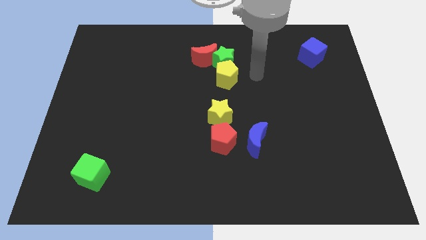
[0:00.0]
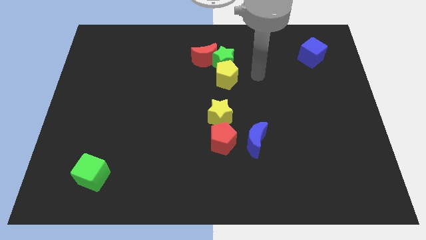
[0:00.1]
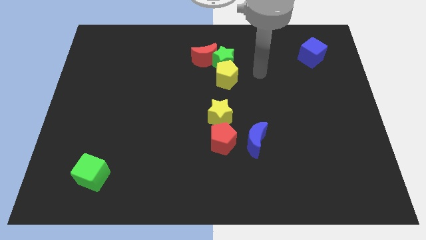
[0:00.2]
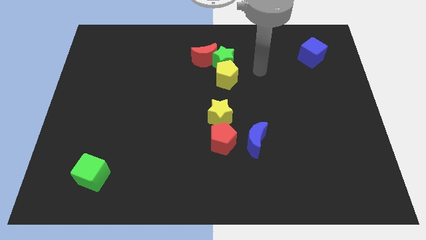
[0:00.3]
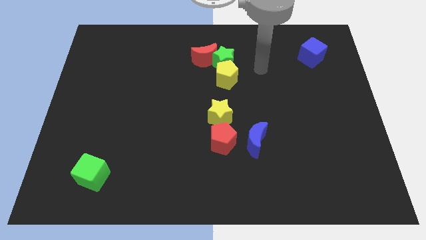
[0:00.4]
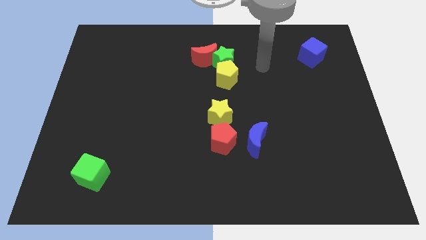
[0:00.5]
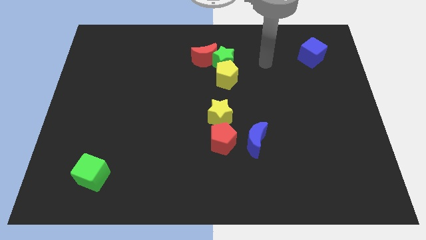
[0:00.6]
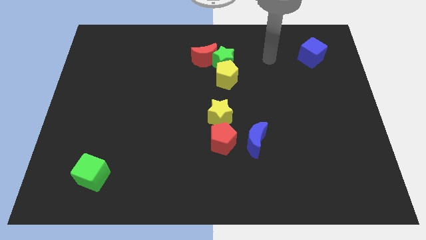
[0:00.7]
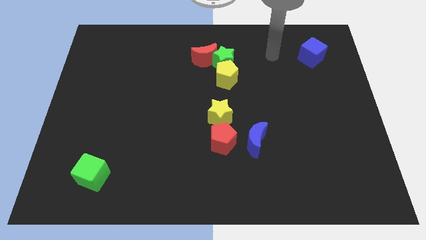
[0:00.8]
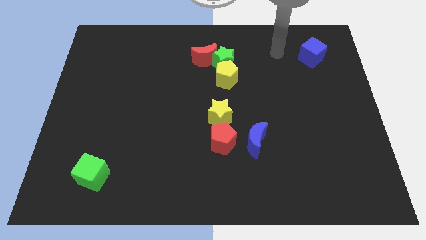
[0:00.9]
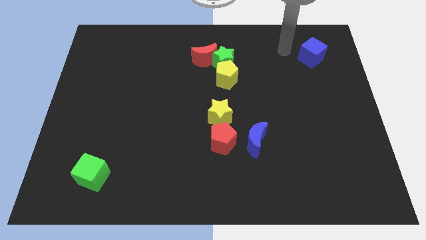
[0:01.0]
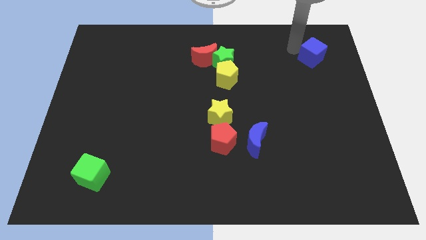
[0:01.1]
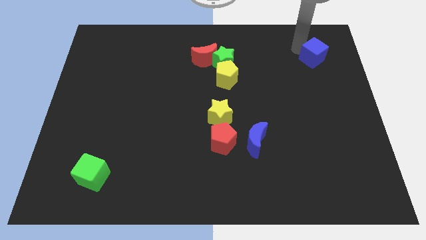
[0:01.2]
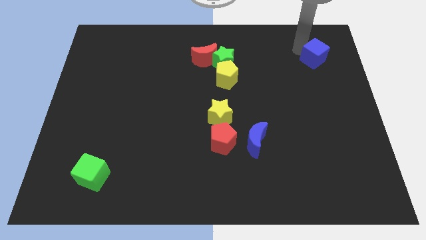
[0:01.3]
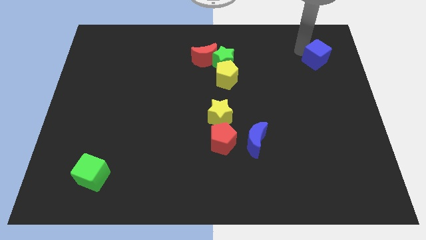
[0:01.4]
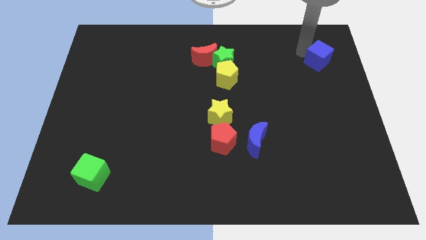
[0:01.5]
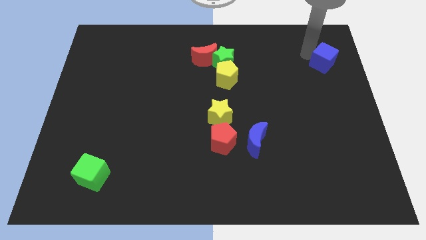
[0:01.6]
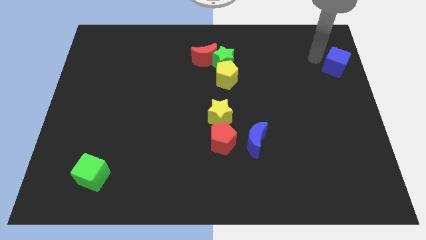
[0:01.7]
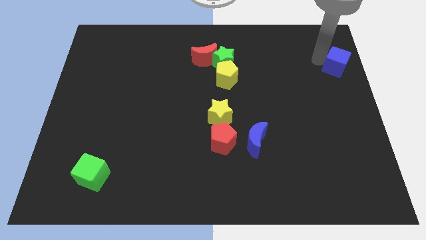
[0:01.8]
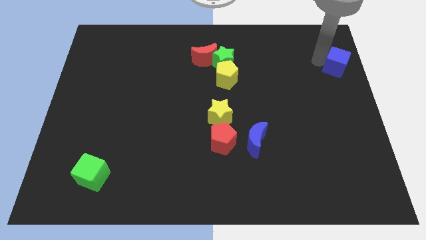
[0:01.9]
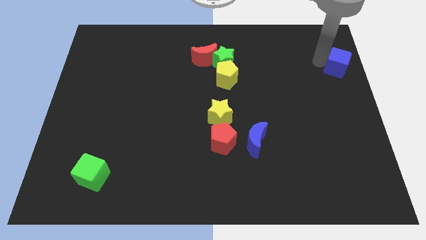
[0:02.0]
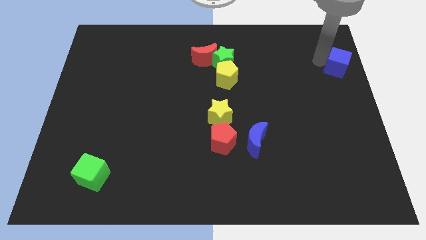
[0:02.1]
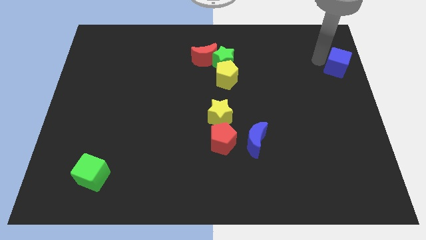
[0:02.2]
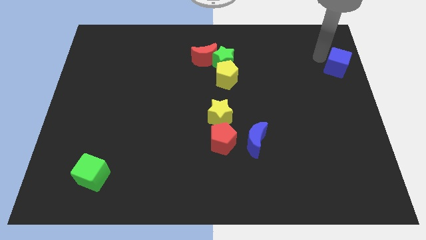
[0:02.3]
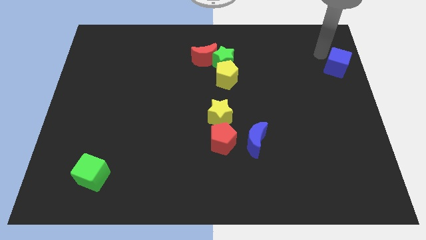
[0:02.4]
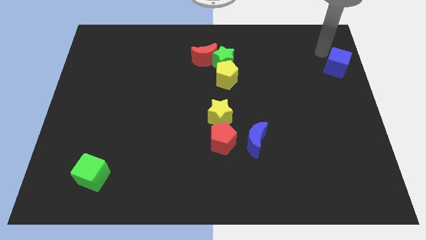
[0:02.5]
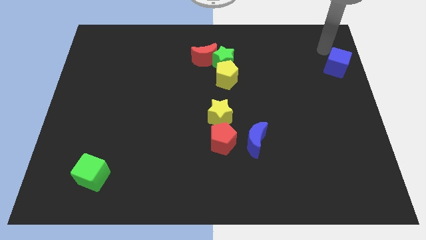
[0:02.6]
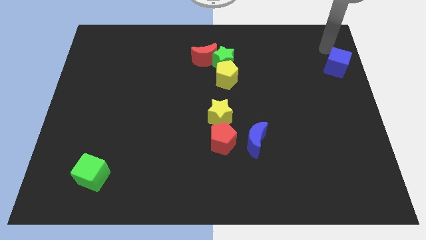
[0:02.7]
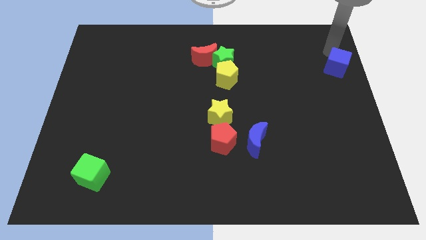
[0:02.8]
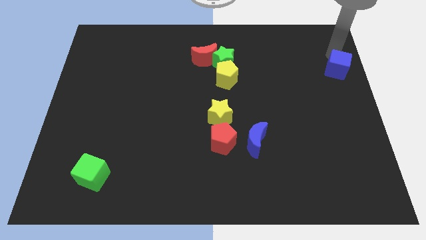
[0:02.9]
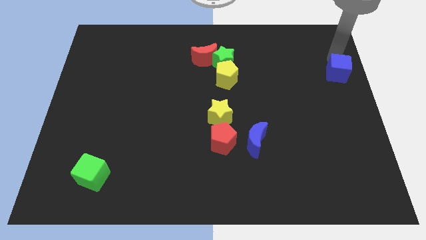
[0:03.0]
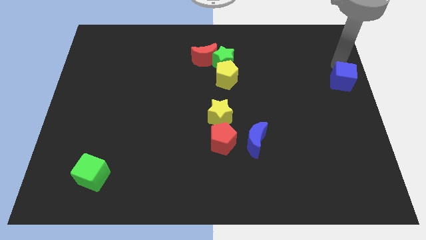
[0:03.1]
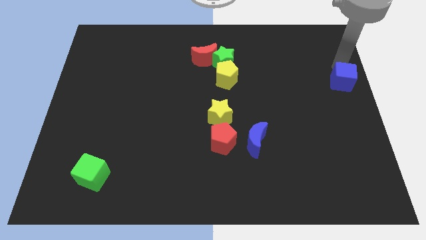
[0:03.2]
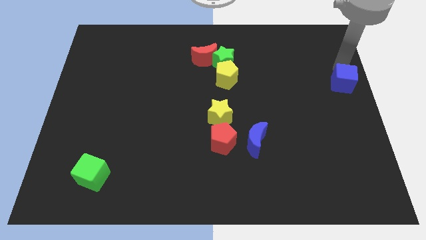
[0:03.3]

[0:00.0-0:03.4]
push the blue cube to the right of the yellow pentagon

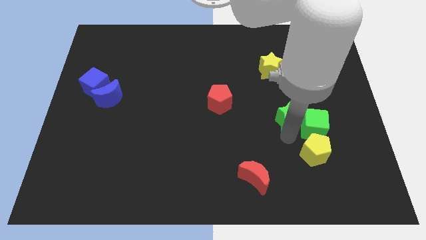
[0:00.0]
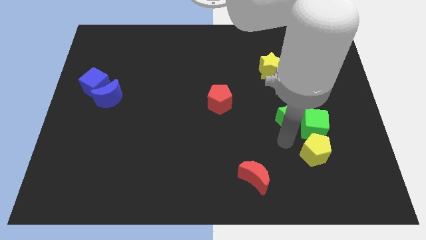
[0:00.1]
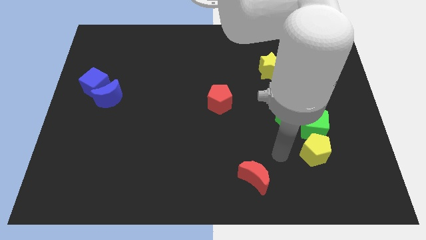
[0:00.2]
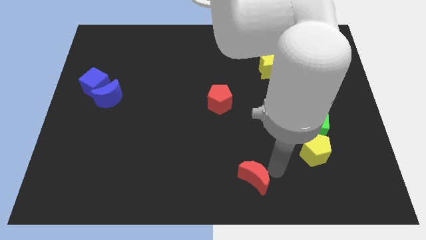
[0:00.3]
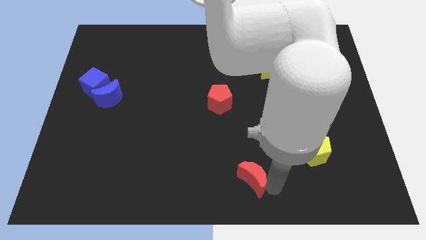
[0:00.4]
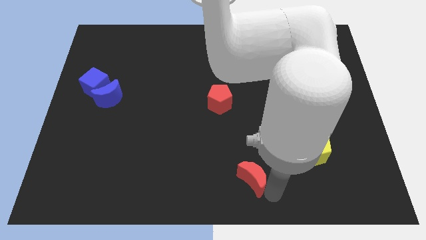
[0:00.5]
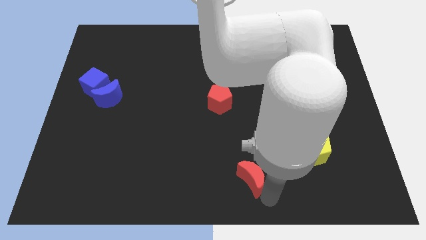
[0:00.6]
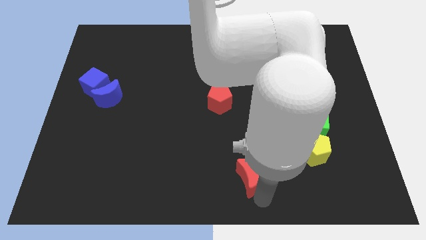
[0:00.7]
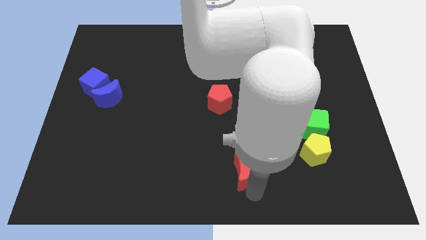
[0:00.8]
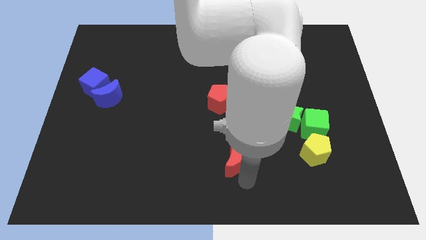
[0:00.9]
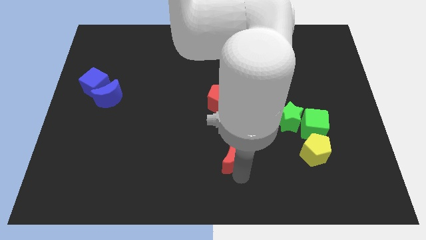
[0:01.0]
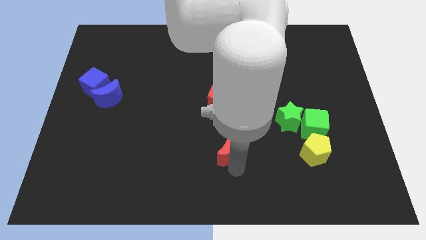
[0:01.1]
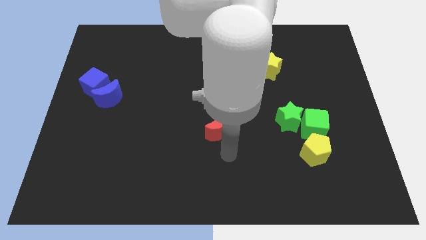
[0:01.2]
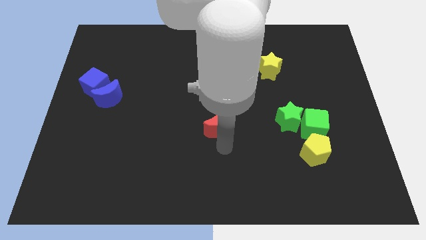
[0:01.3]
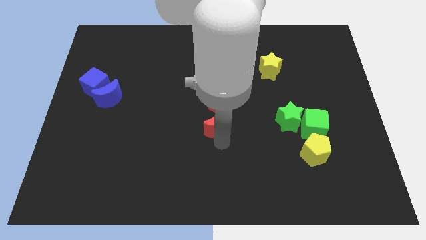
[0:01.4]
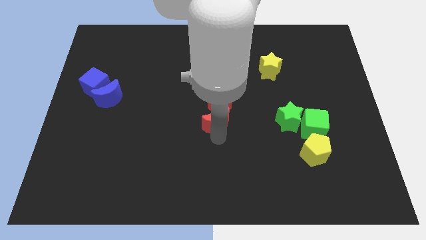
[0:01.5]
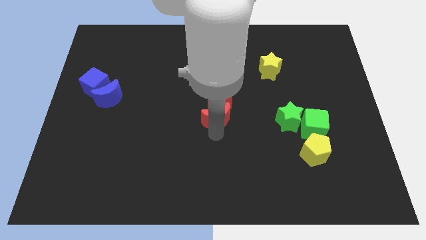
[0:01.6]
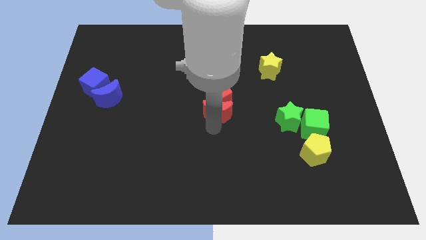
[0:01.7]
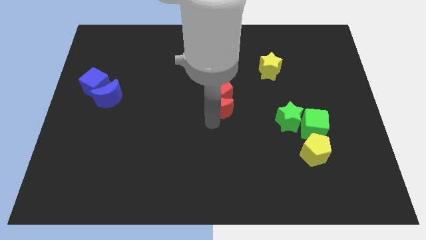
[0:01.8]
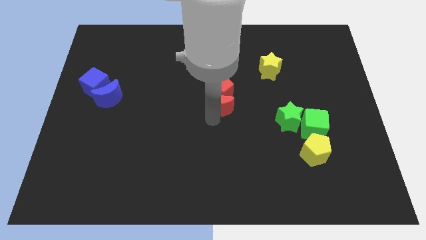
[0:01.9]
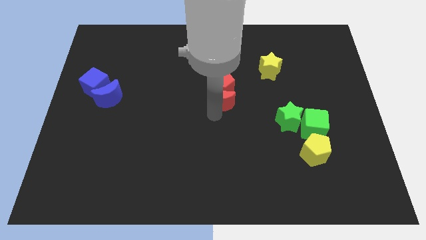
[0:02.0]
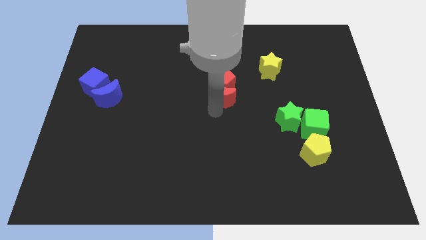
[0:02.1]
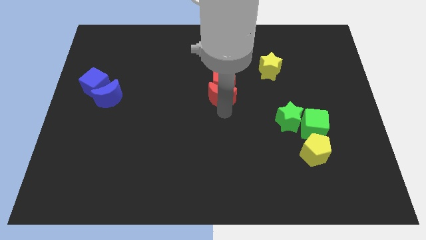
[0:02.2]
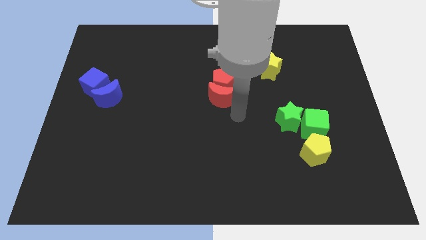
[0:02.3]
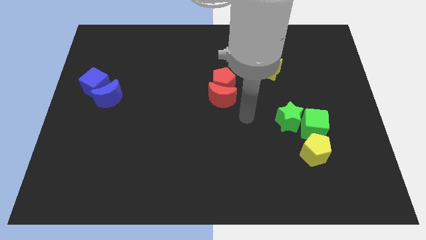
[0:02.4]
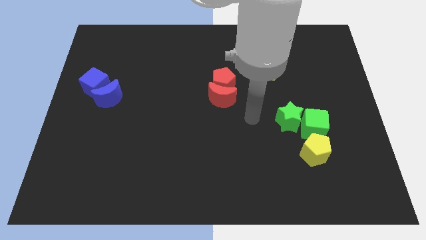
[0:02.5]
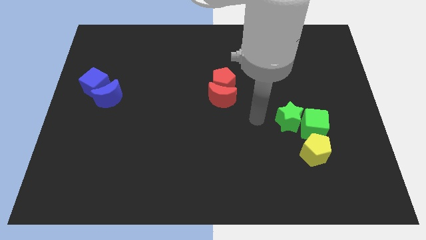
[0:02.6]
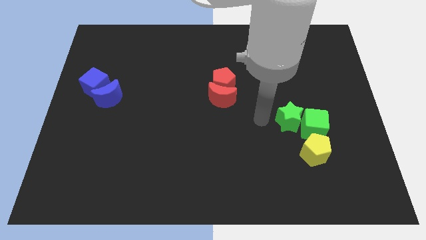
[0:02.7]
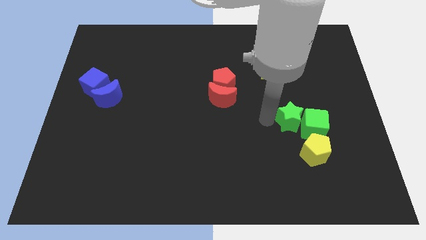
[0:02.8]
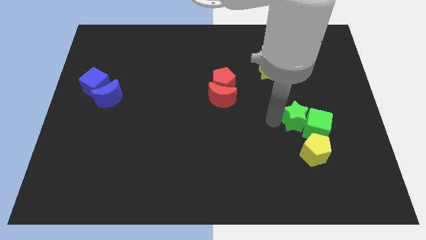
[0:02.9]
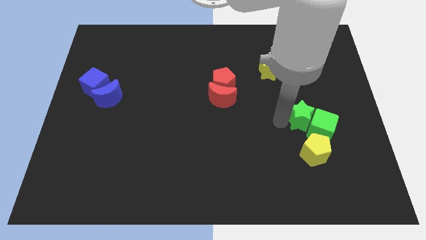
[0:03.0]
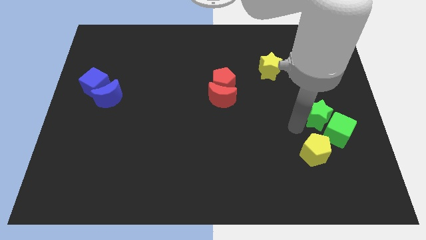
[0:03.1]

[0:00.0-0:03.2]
push the red moon into red pentagon

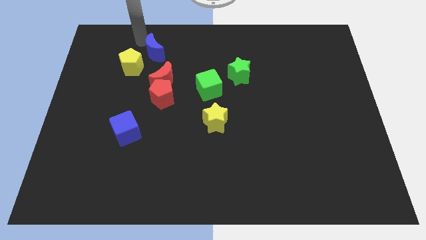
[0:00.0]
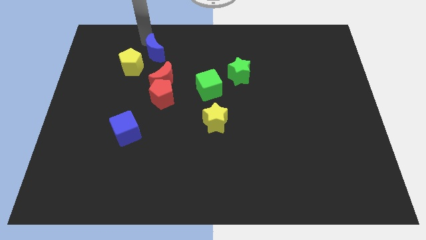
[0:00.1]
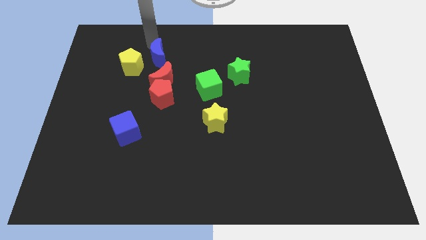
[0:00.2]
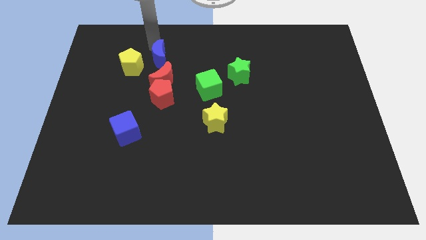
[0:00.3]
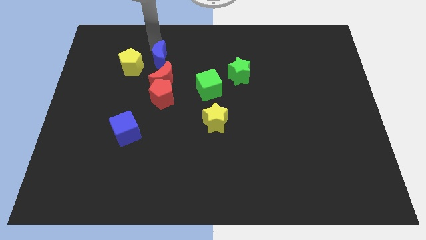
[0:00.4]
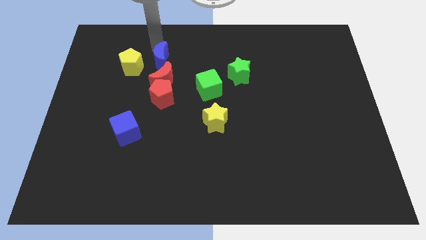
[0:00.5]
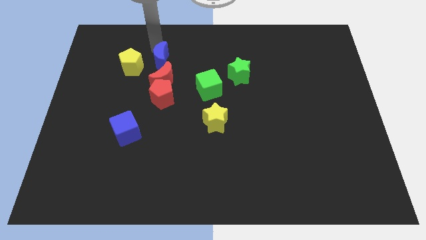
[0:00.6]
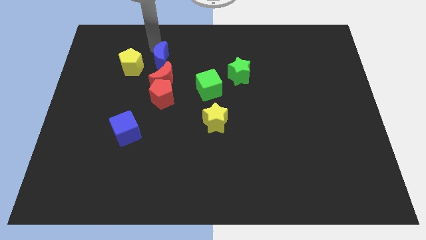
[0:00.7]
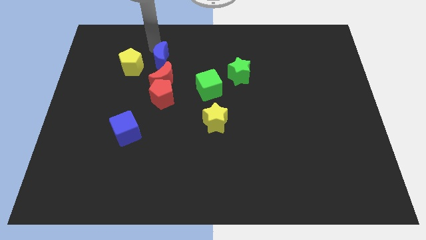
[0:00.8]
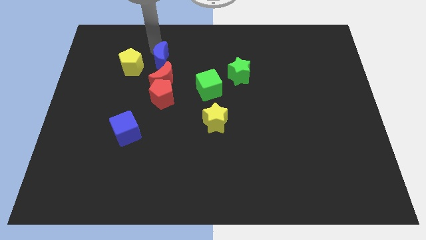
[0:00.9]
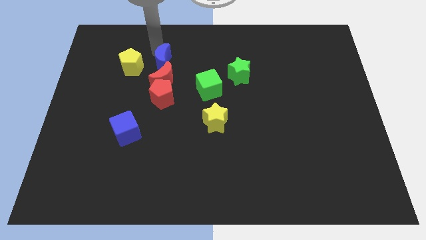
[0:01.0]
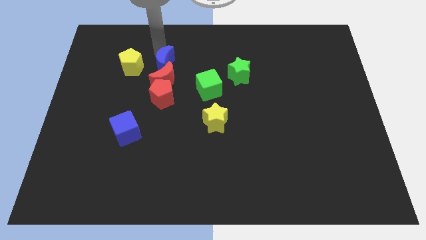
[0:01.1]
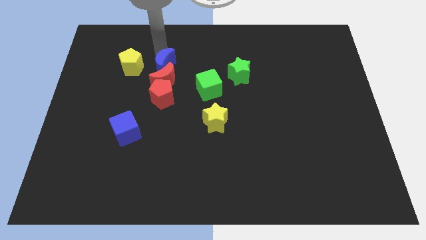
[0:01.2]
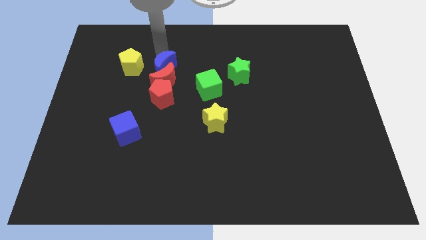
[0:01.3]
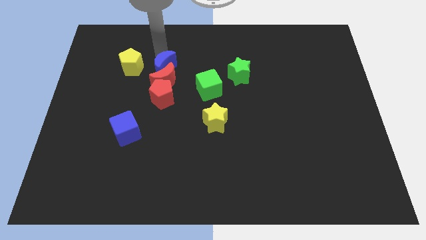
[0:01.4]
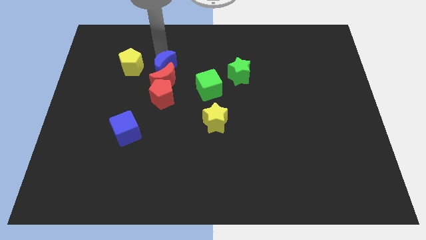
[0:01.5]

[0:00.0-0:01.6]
drag the blue moon close to red moon

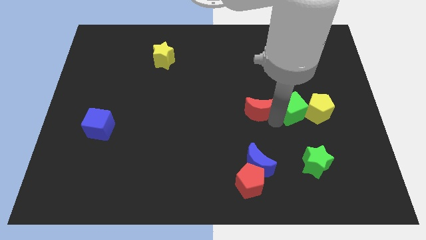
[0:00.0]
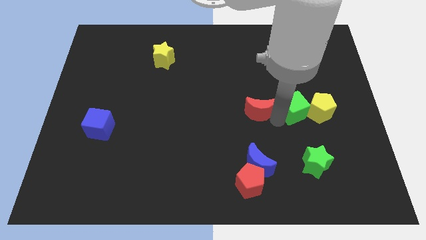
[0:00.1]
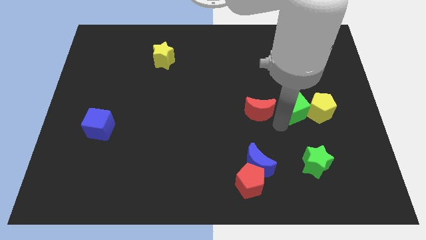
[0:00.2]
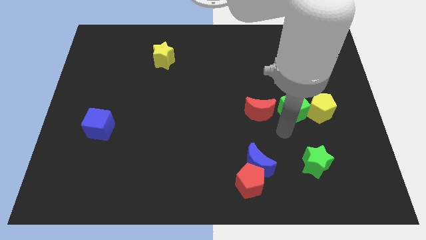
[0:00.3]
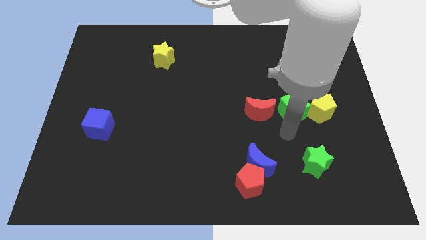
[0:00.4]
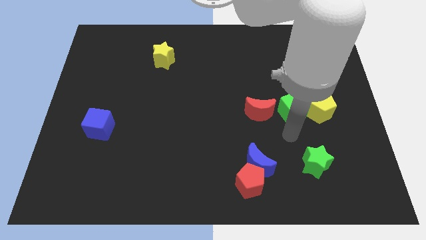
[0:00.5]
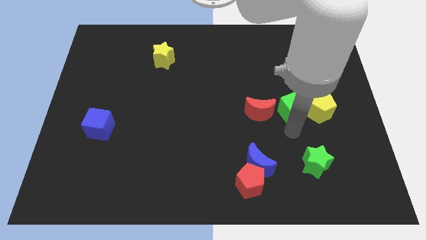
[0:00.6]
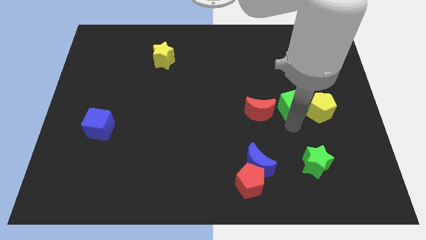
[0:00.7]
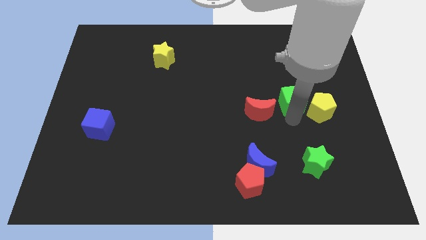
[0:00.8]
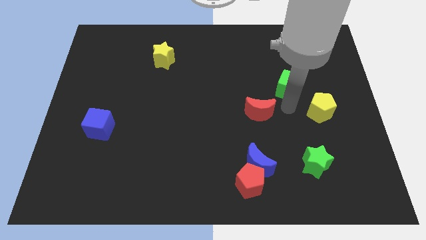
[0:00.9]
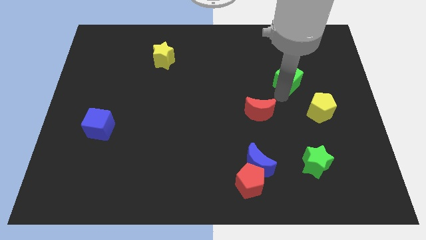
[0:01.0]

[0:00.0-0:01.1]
separate green cube from red crescent and yellow pentagon
